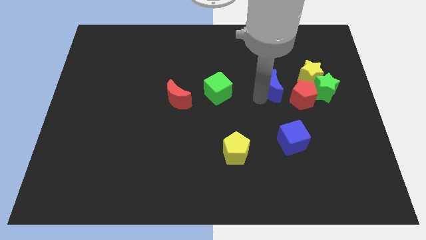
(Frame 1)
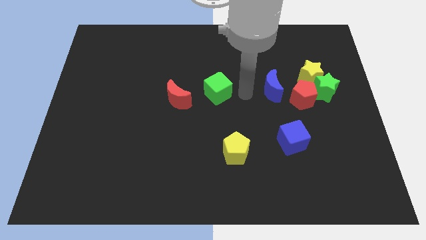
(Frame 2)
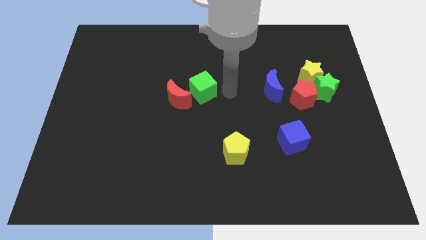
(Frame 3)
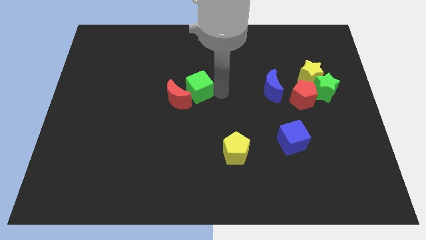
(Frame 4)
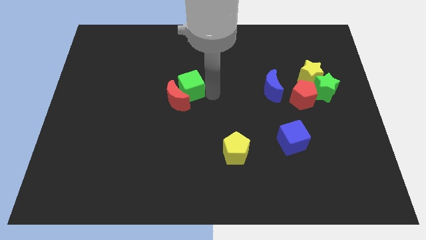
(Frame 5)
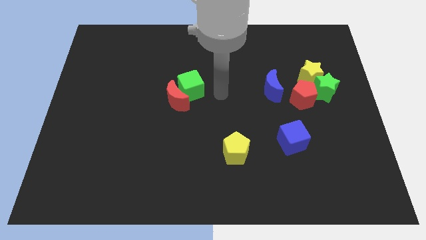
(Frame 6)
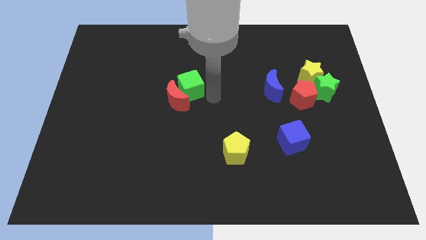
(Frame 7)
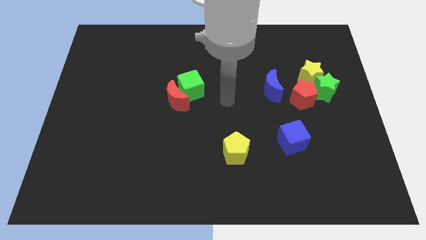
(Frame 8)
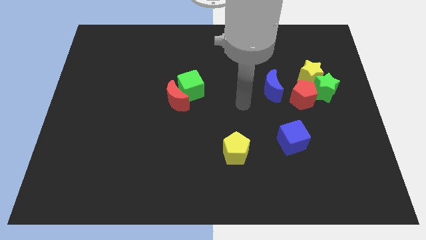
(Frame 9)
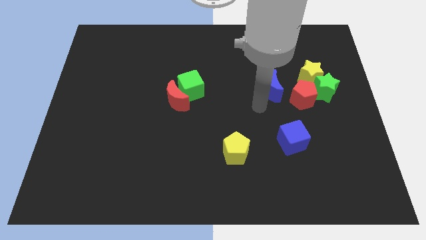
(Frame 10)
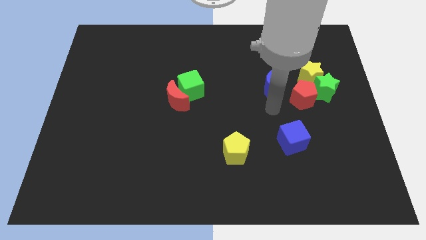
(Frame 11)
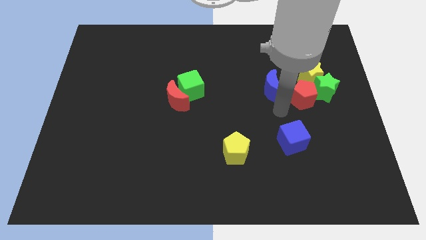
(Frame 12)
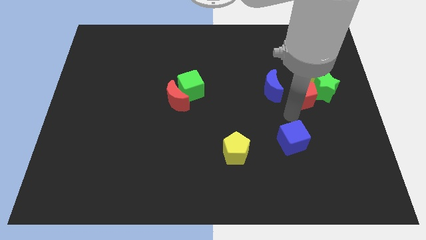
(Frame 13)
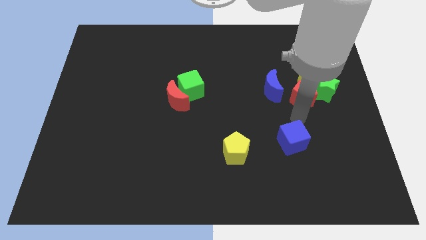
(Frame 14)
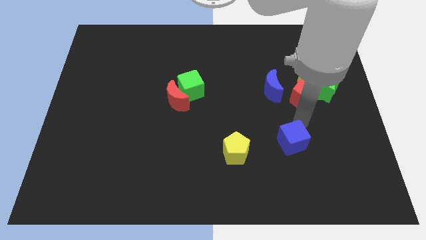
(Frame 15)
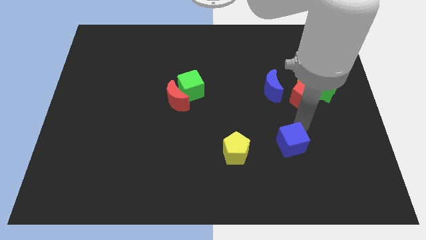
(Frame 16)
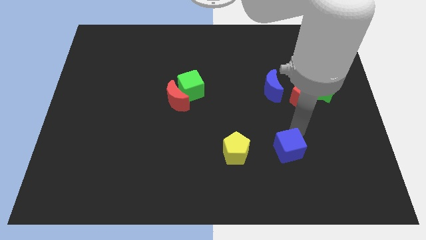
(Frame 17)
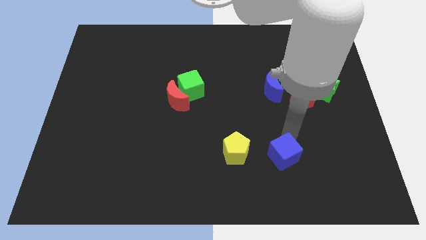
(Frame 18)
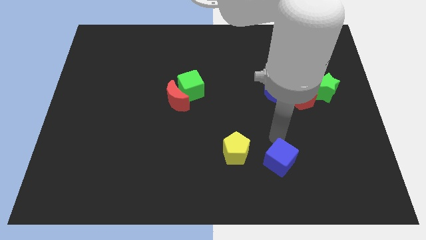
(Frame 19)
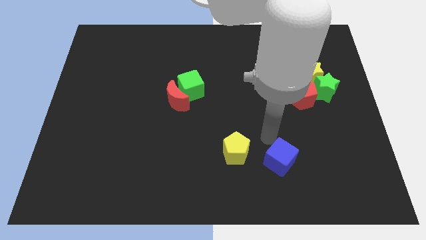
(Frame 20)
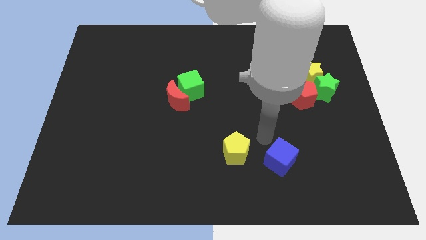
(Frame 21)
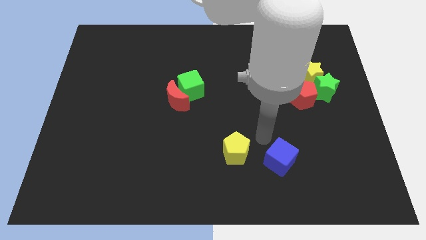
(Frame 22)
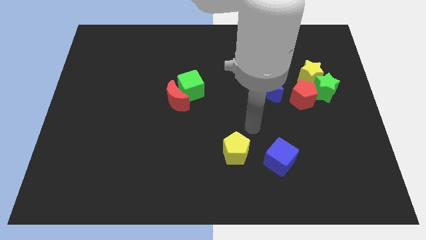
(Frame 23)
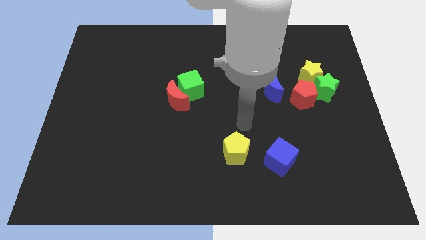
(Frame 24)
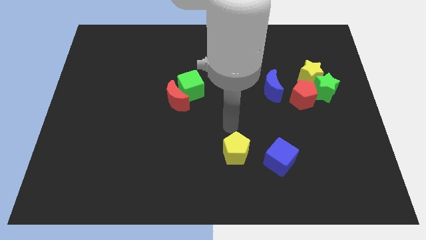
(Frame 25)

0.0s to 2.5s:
move the green cube into red crescent

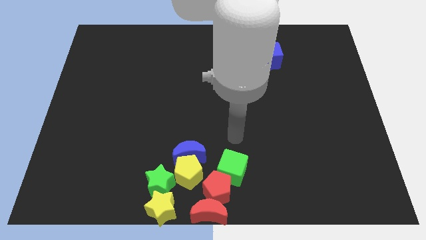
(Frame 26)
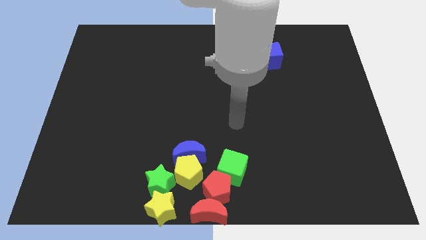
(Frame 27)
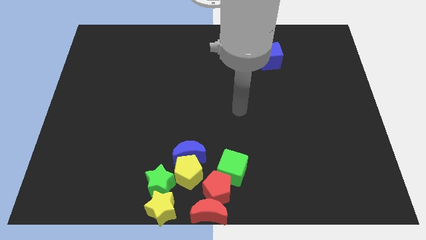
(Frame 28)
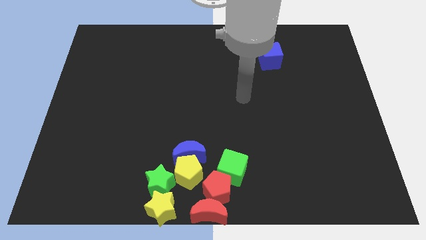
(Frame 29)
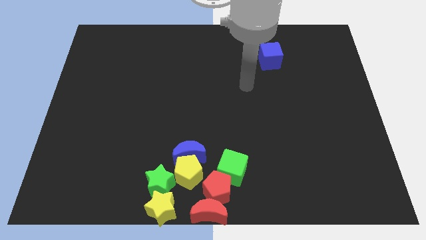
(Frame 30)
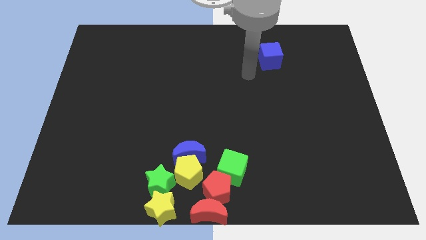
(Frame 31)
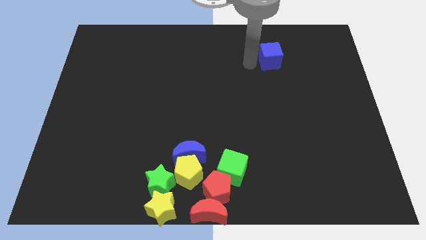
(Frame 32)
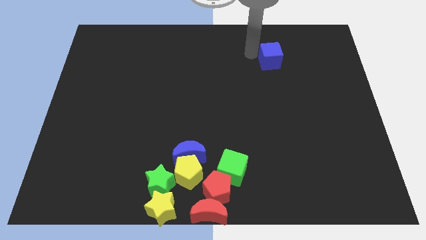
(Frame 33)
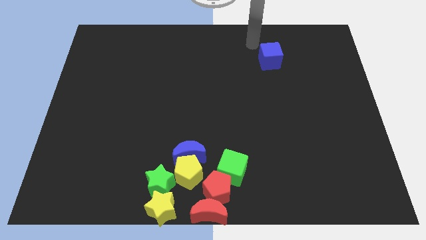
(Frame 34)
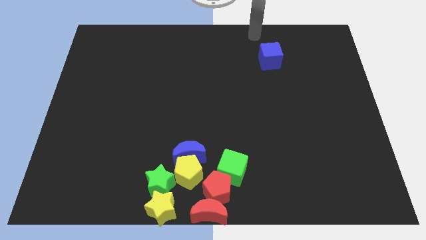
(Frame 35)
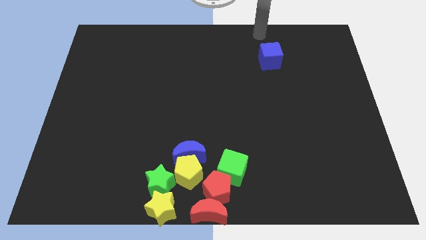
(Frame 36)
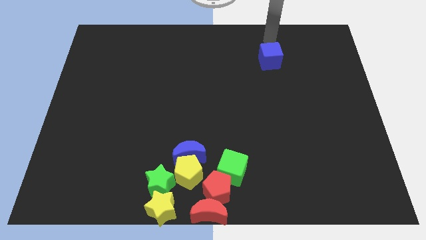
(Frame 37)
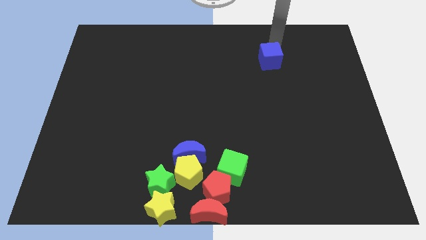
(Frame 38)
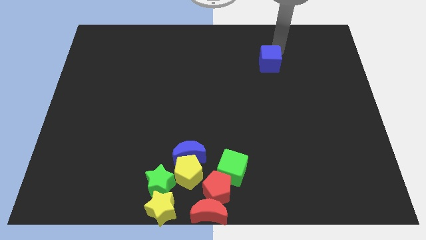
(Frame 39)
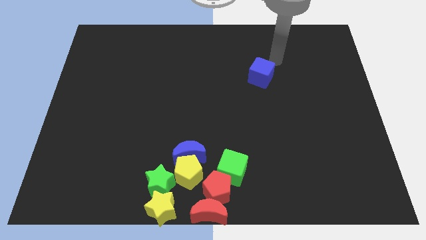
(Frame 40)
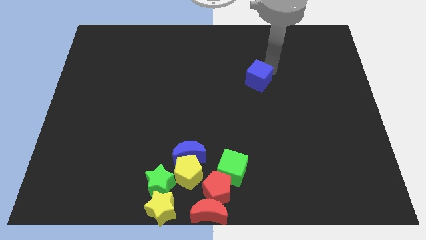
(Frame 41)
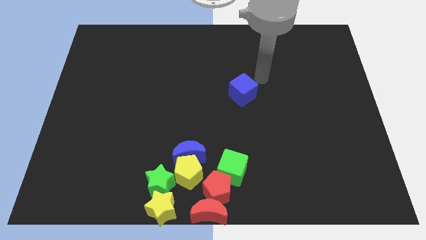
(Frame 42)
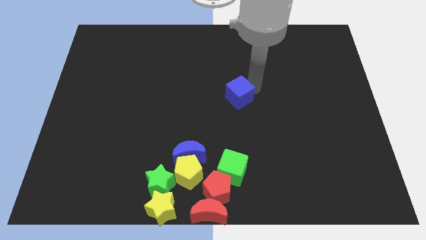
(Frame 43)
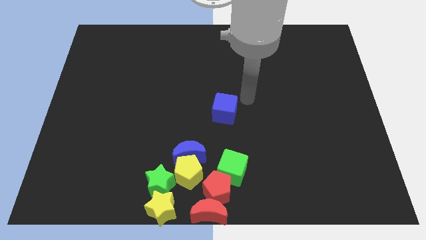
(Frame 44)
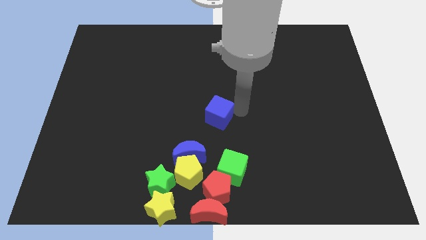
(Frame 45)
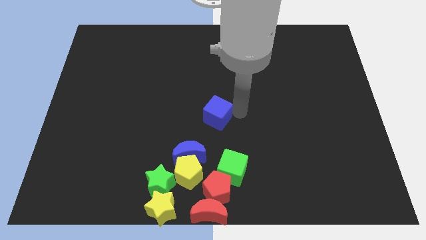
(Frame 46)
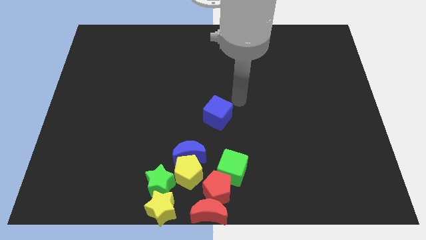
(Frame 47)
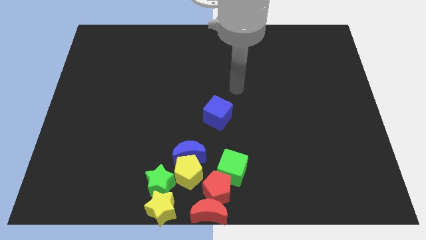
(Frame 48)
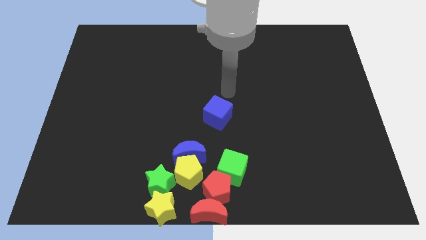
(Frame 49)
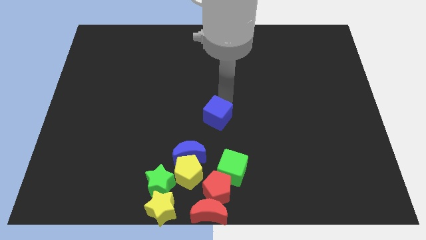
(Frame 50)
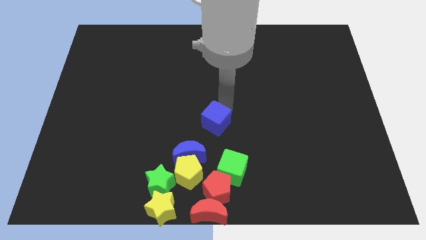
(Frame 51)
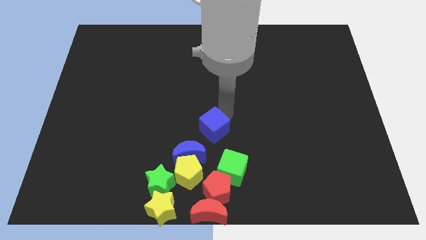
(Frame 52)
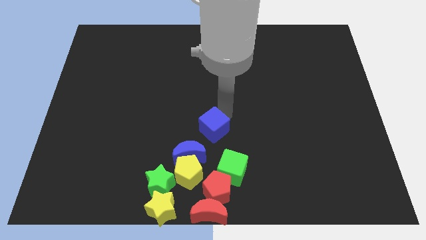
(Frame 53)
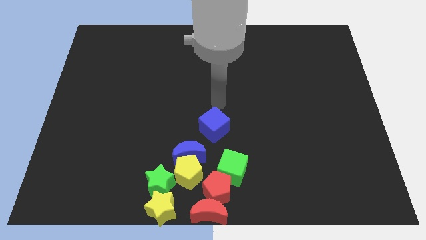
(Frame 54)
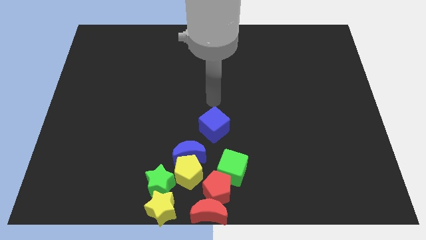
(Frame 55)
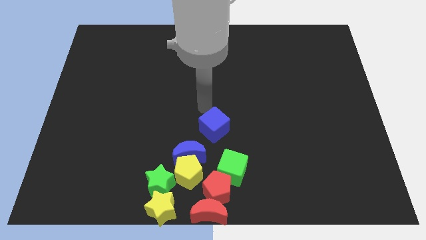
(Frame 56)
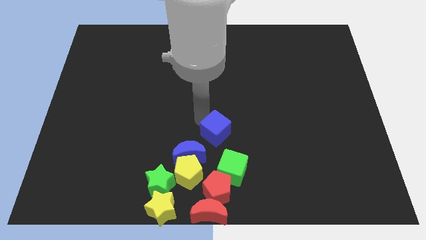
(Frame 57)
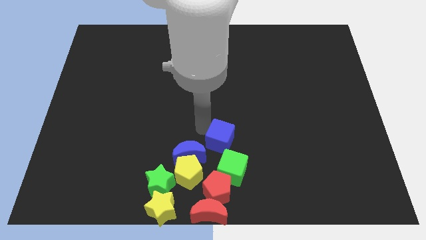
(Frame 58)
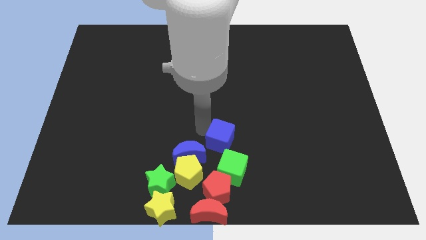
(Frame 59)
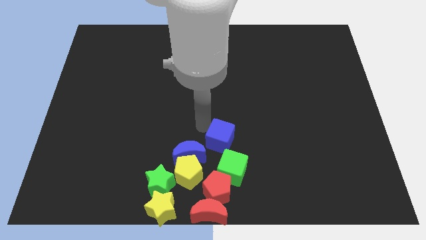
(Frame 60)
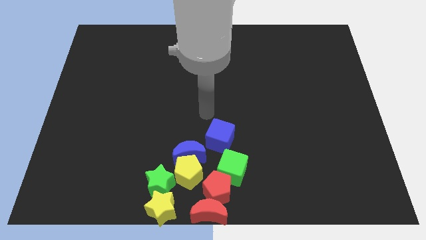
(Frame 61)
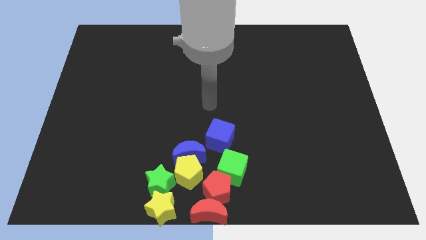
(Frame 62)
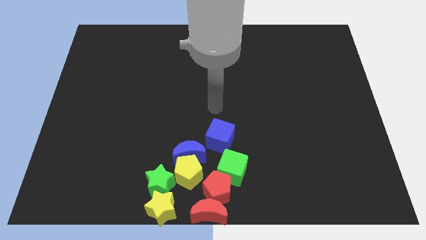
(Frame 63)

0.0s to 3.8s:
put the blue cube at top left to the green cube

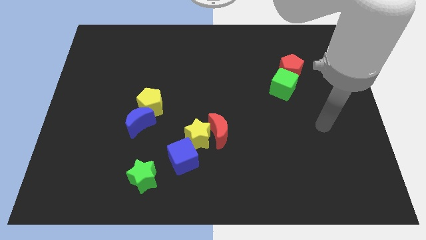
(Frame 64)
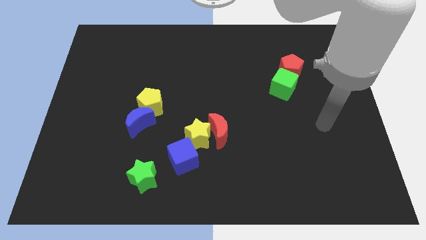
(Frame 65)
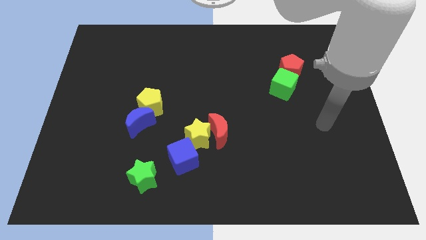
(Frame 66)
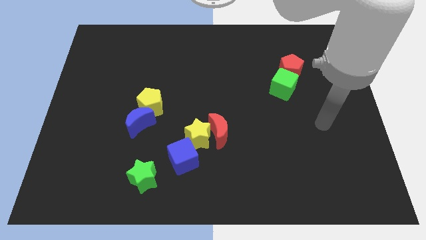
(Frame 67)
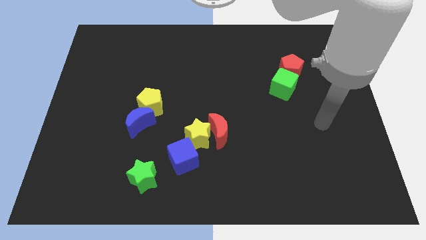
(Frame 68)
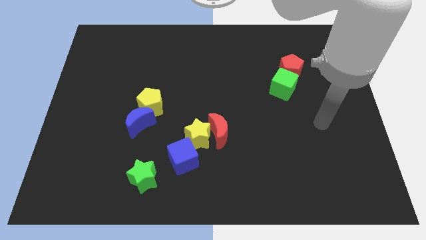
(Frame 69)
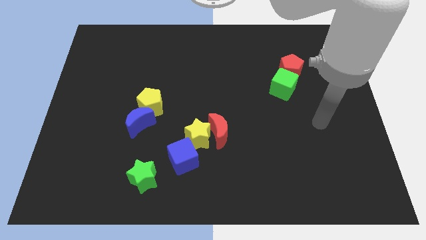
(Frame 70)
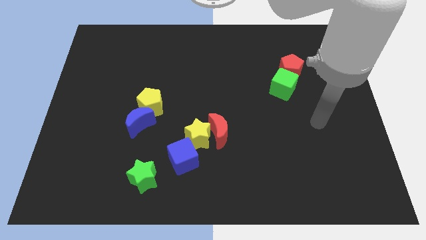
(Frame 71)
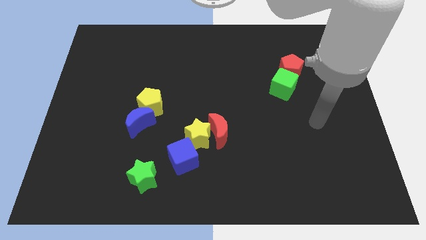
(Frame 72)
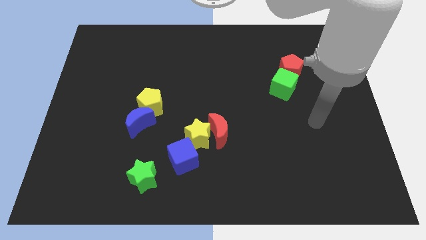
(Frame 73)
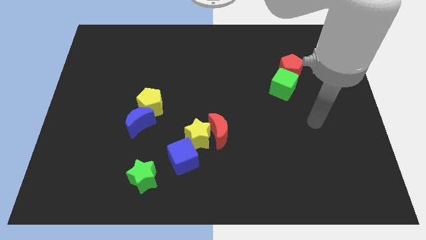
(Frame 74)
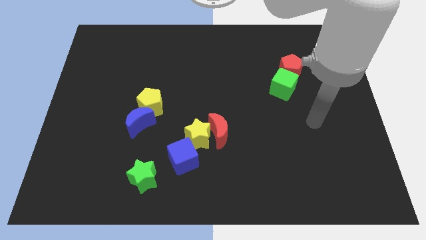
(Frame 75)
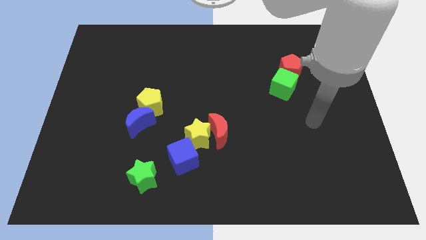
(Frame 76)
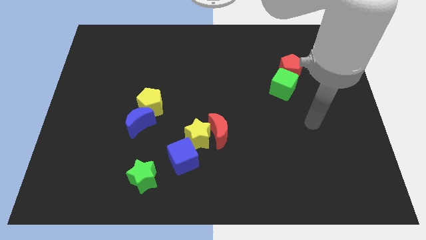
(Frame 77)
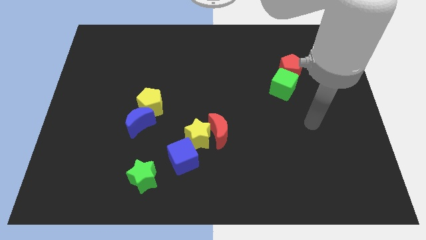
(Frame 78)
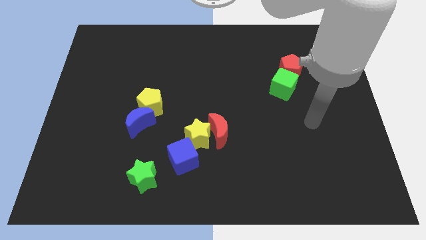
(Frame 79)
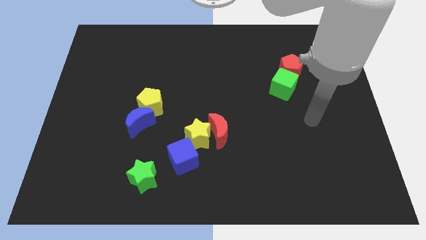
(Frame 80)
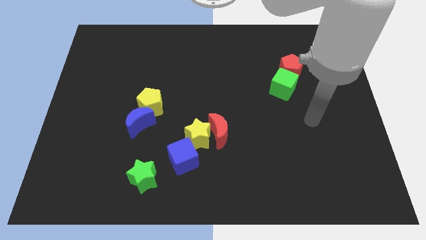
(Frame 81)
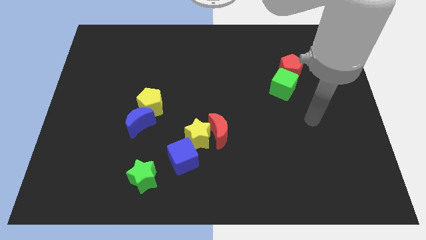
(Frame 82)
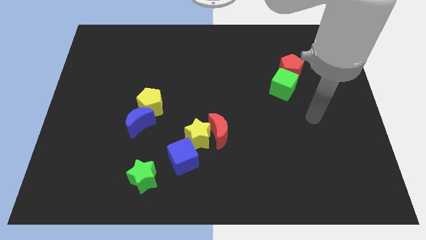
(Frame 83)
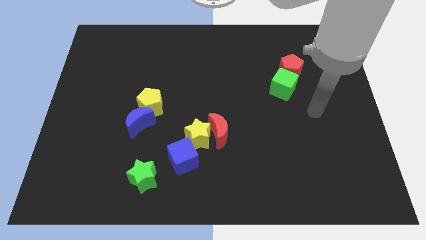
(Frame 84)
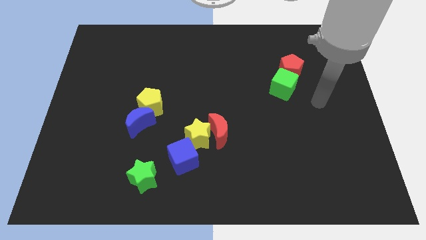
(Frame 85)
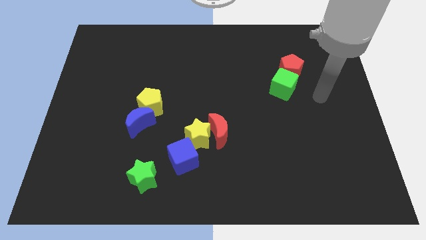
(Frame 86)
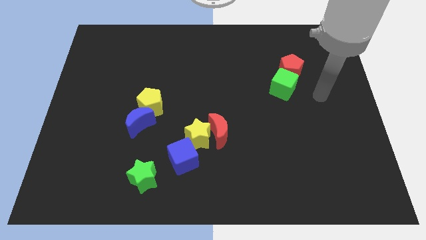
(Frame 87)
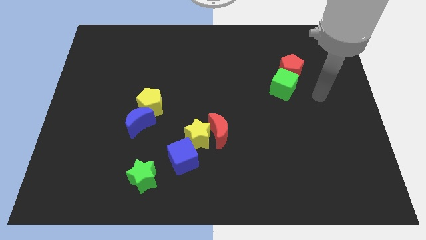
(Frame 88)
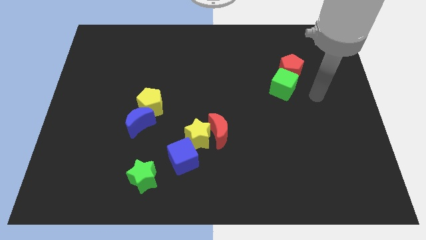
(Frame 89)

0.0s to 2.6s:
place your hand to right side of the green cube
